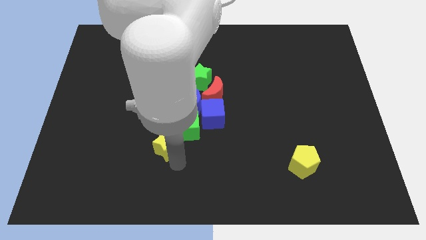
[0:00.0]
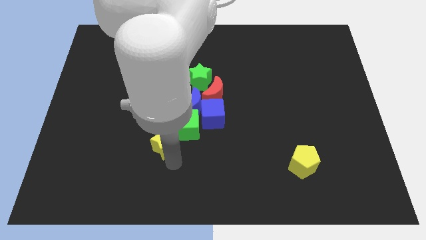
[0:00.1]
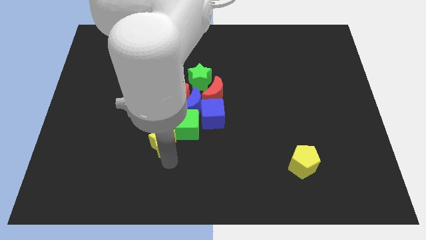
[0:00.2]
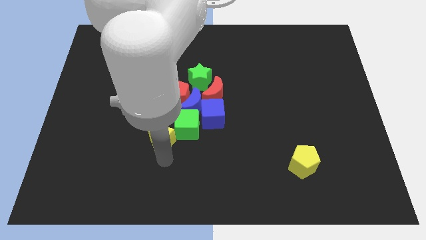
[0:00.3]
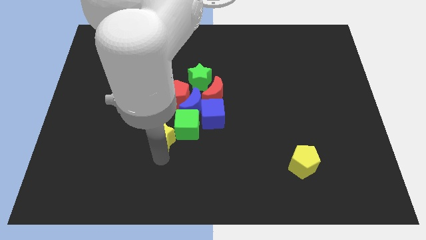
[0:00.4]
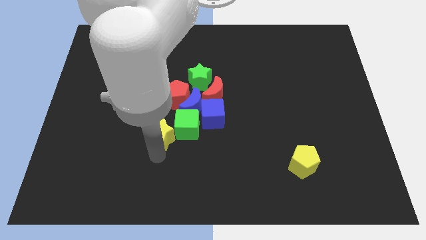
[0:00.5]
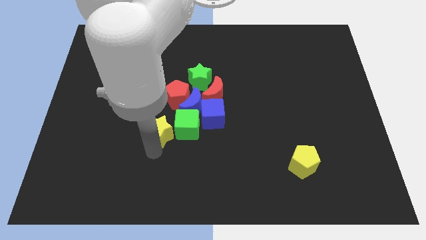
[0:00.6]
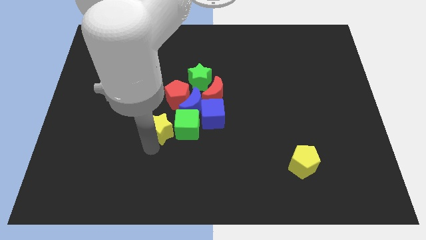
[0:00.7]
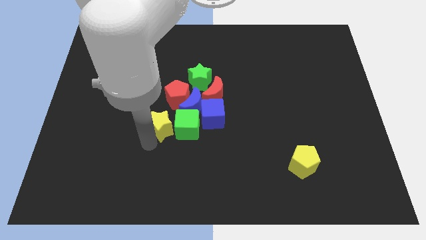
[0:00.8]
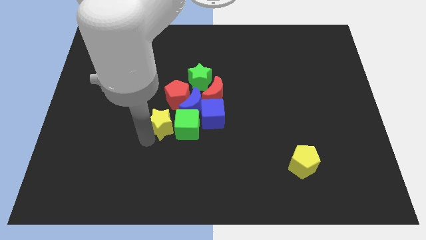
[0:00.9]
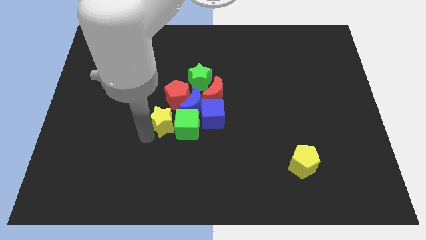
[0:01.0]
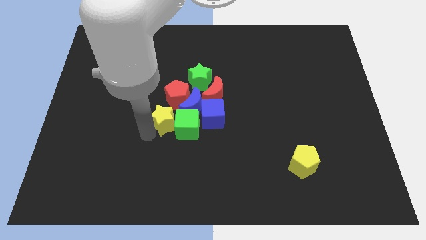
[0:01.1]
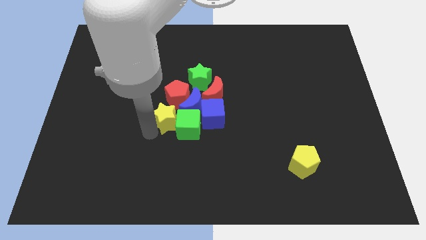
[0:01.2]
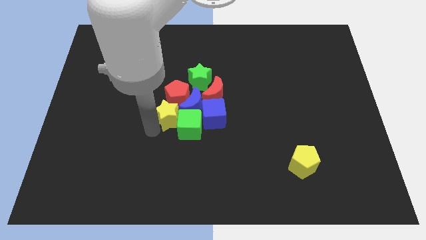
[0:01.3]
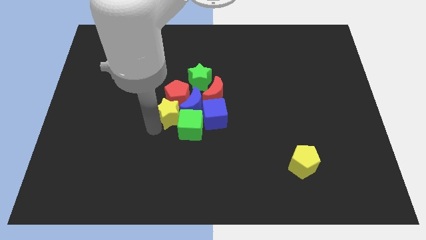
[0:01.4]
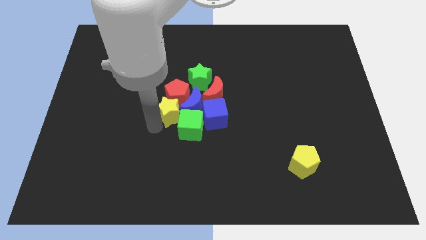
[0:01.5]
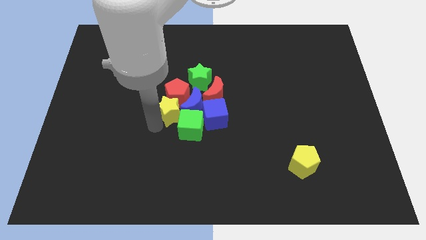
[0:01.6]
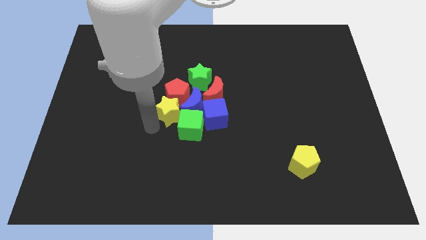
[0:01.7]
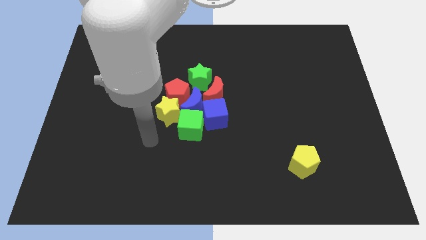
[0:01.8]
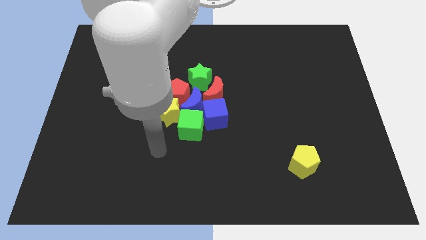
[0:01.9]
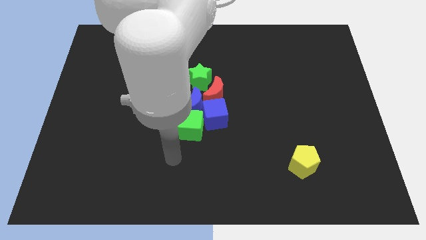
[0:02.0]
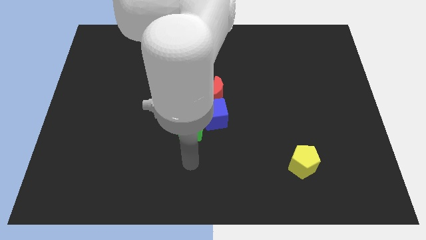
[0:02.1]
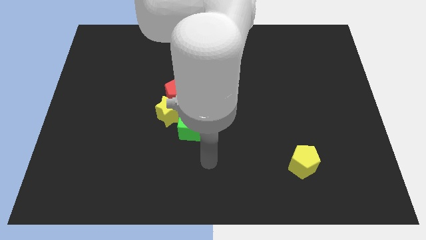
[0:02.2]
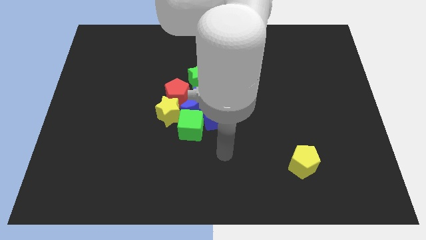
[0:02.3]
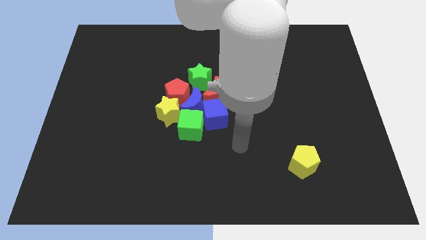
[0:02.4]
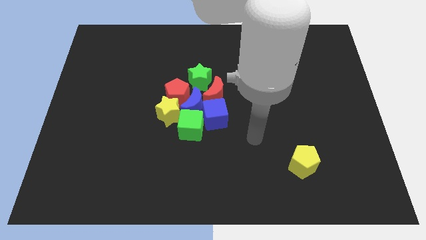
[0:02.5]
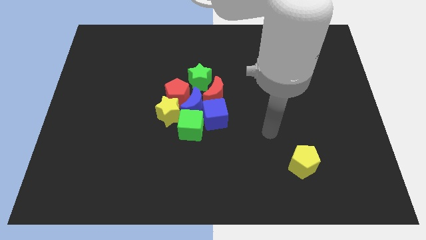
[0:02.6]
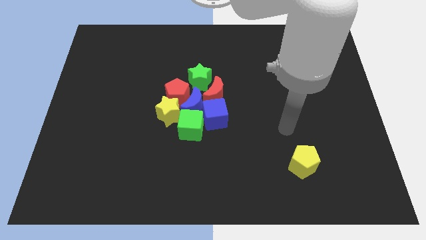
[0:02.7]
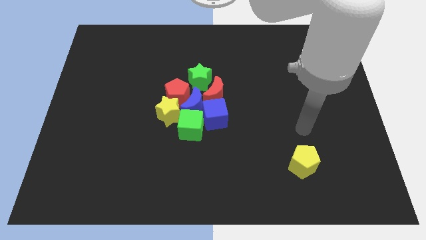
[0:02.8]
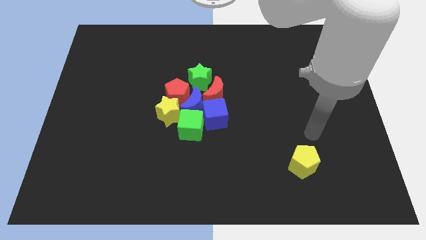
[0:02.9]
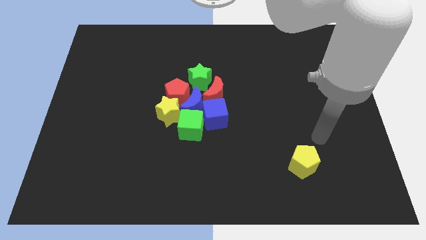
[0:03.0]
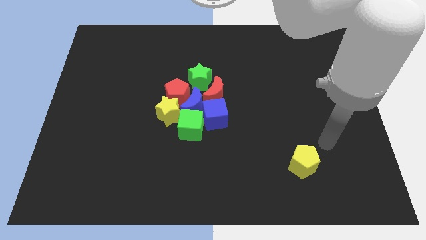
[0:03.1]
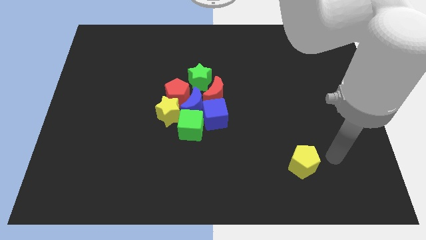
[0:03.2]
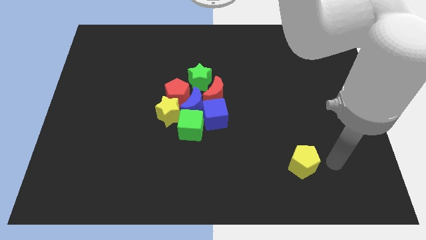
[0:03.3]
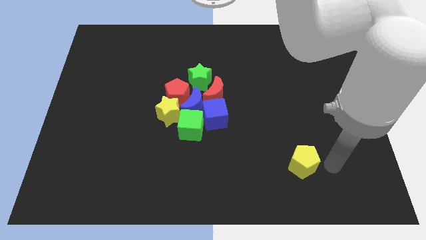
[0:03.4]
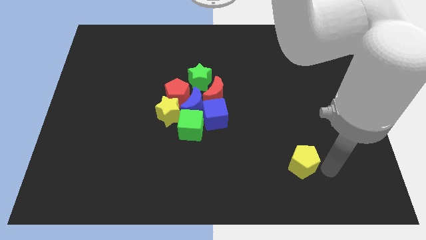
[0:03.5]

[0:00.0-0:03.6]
push the yellow star below the red pentagon

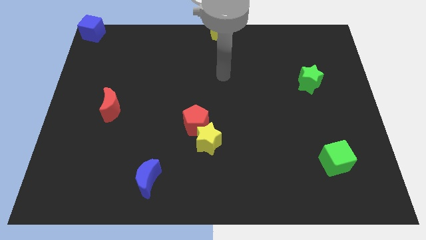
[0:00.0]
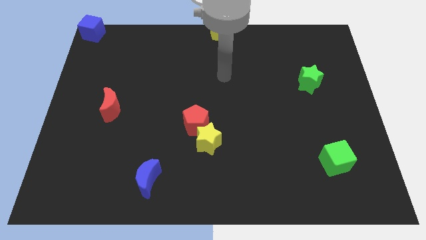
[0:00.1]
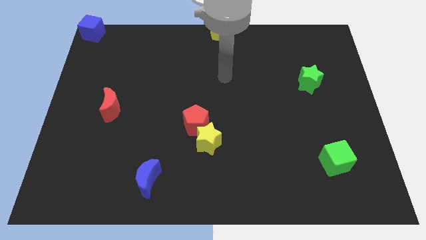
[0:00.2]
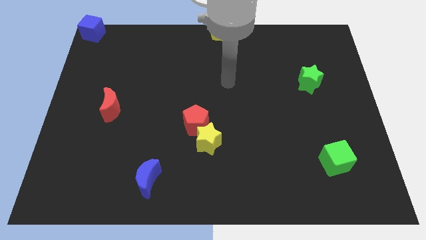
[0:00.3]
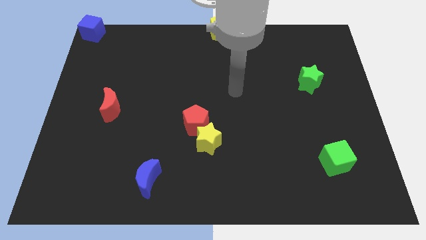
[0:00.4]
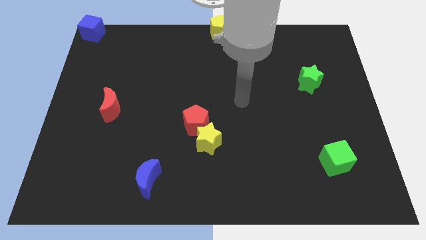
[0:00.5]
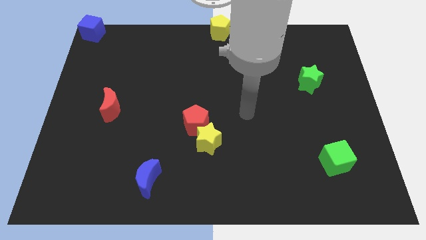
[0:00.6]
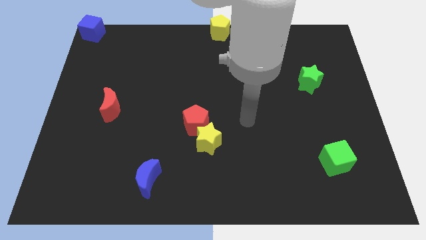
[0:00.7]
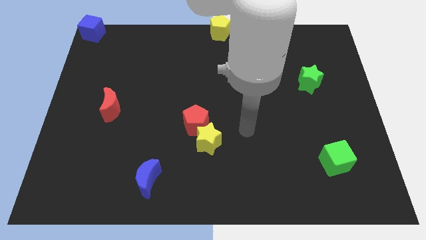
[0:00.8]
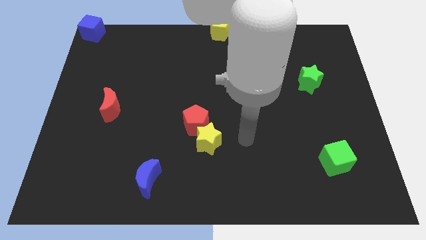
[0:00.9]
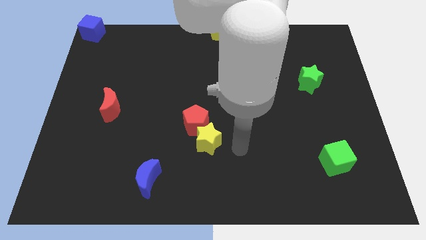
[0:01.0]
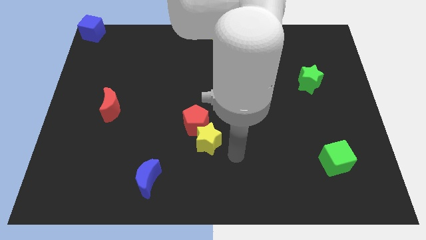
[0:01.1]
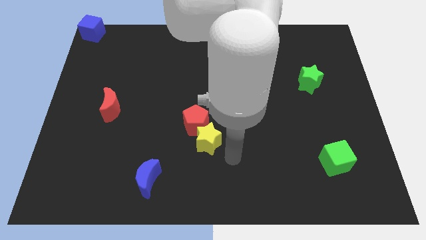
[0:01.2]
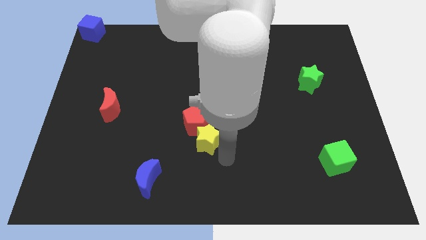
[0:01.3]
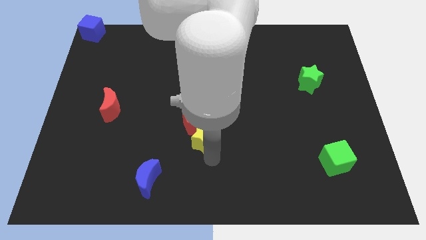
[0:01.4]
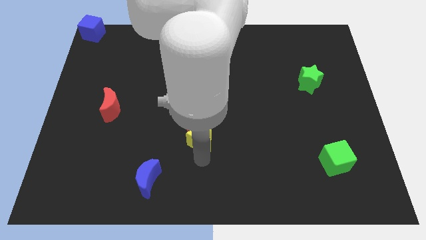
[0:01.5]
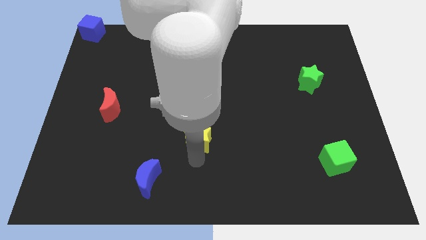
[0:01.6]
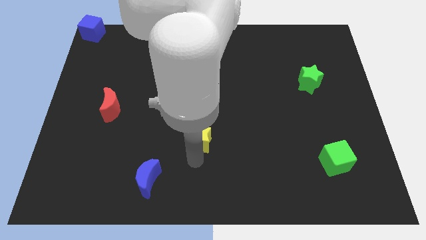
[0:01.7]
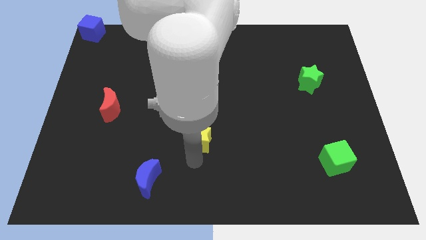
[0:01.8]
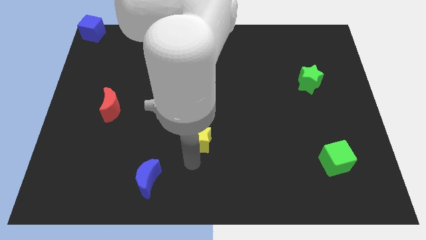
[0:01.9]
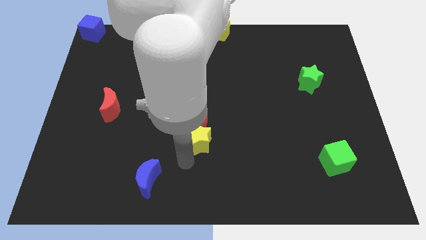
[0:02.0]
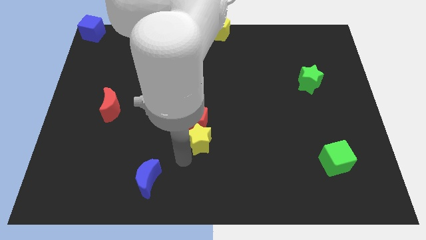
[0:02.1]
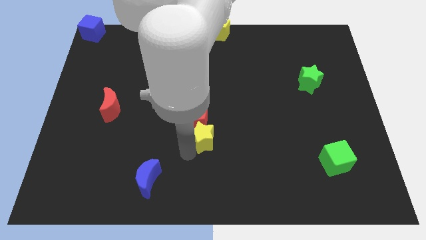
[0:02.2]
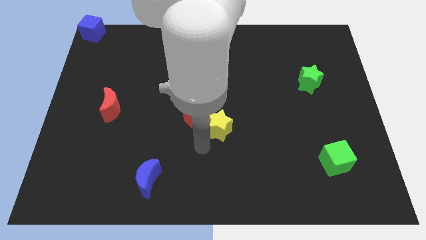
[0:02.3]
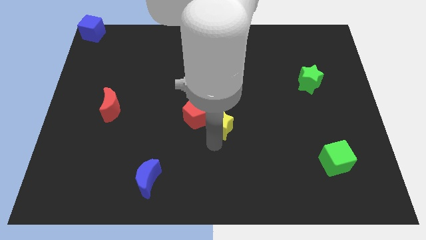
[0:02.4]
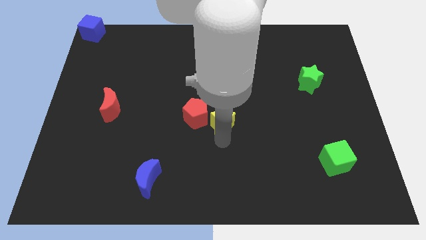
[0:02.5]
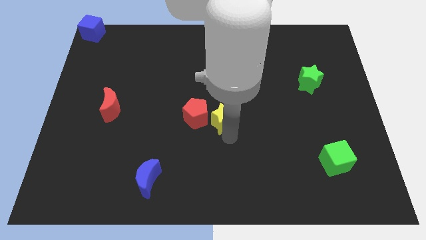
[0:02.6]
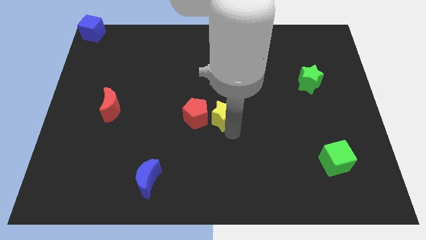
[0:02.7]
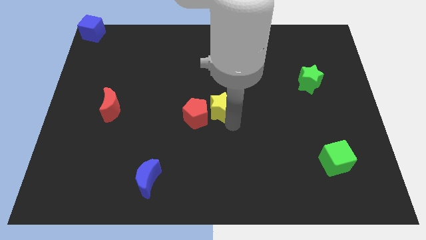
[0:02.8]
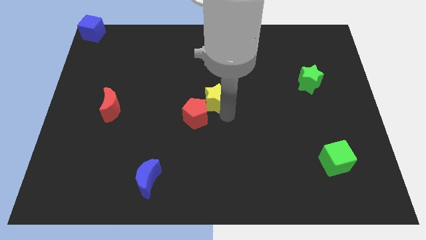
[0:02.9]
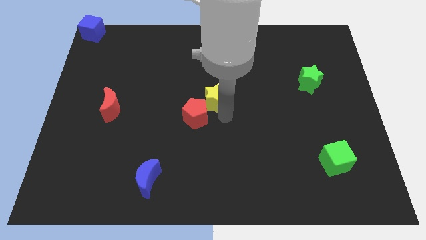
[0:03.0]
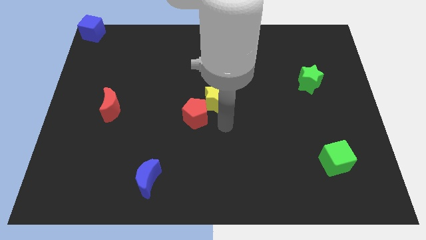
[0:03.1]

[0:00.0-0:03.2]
move yellow star towards center

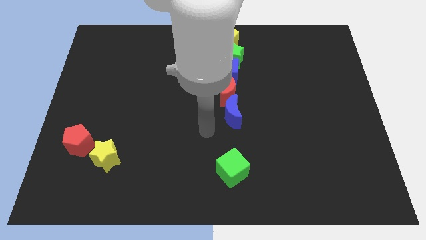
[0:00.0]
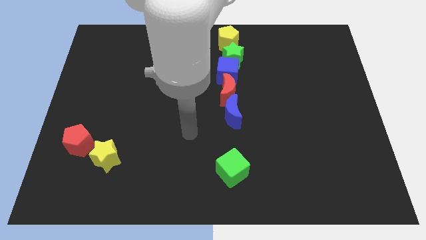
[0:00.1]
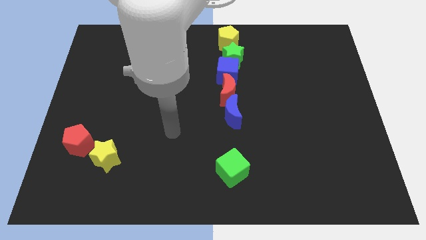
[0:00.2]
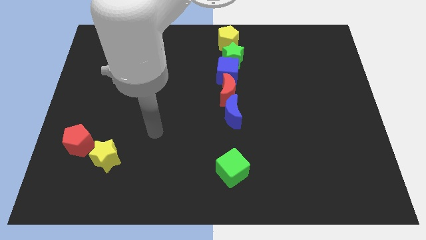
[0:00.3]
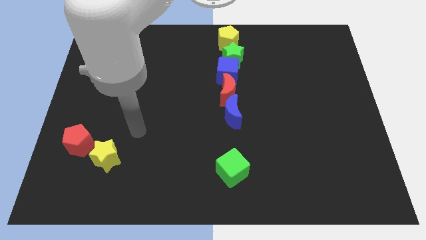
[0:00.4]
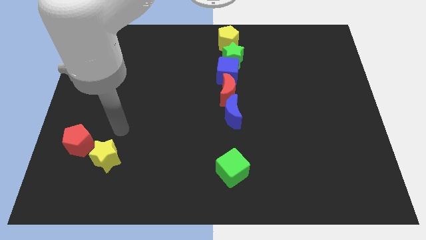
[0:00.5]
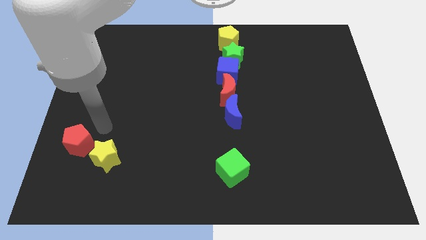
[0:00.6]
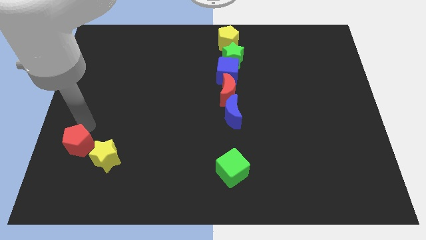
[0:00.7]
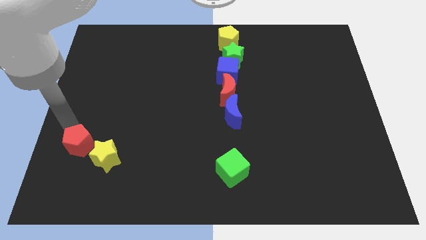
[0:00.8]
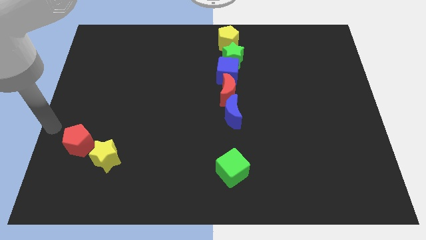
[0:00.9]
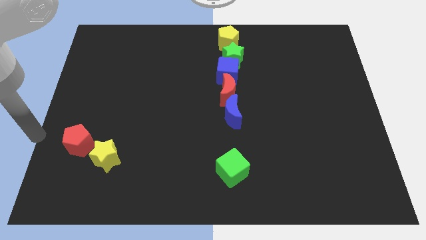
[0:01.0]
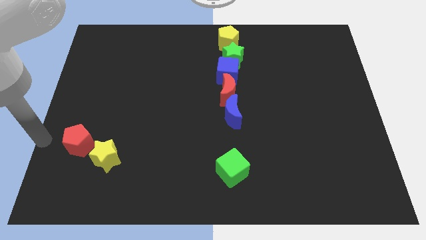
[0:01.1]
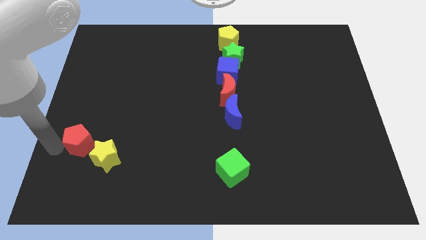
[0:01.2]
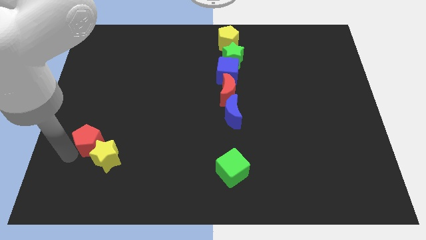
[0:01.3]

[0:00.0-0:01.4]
move your arm towards the red pentagon

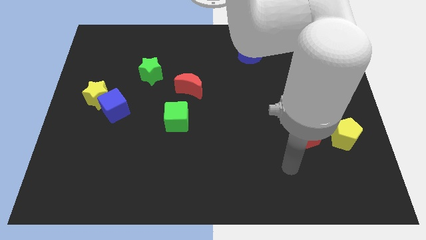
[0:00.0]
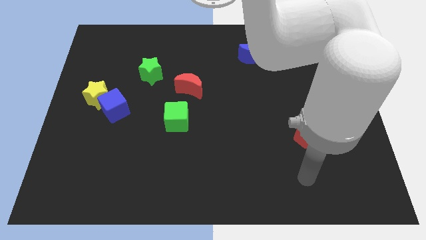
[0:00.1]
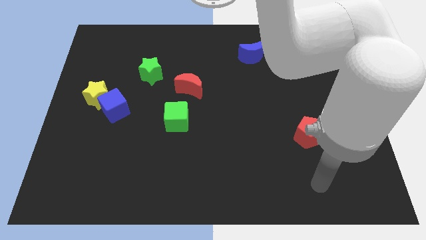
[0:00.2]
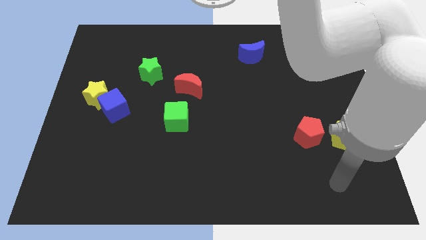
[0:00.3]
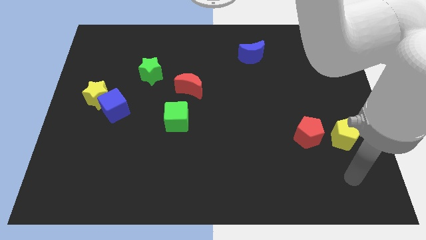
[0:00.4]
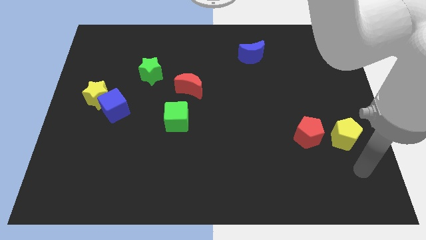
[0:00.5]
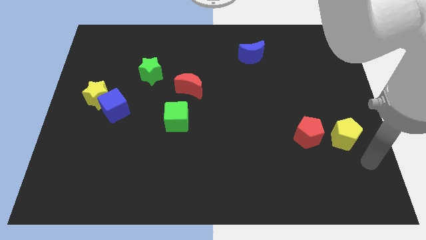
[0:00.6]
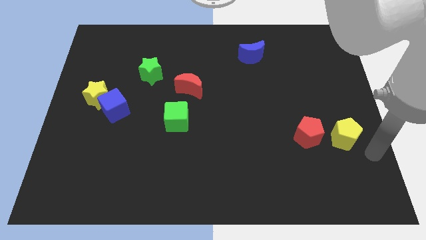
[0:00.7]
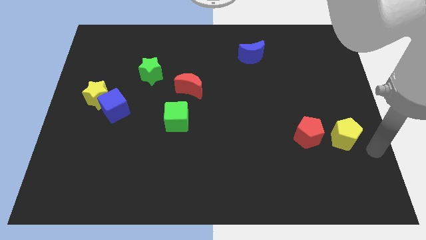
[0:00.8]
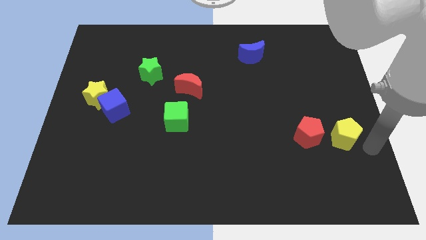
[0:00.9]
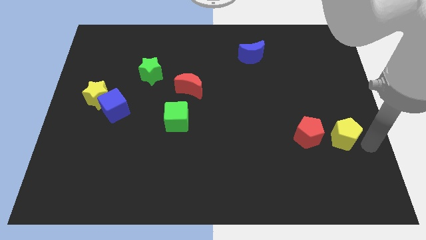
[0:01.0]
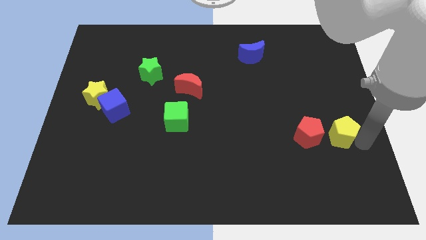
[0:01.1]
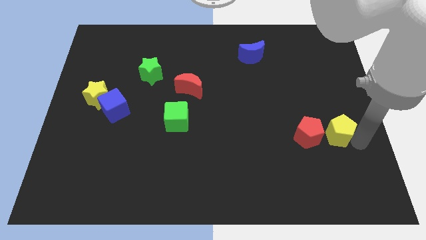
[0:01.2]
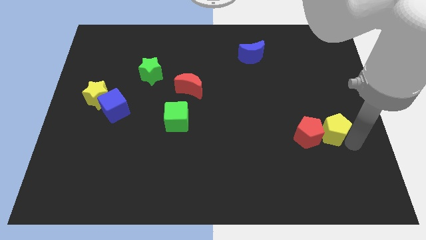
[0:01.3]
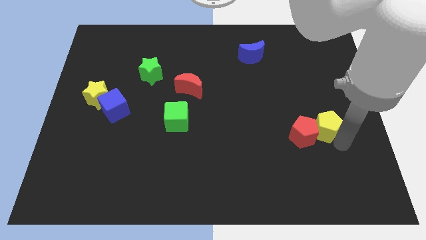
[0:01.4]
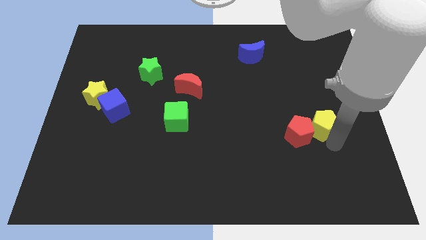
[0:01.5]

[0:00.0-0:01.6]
push the yellow pentagon into the red pentagon
